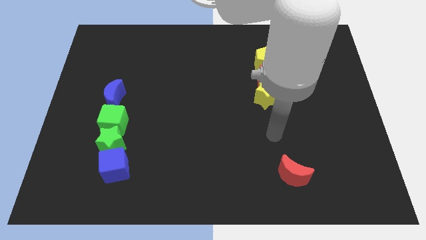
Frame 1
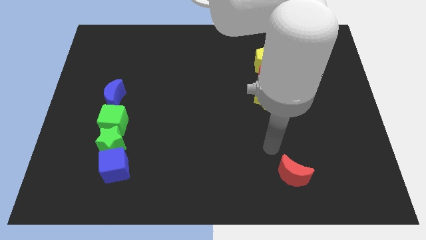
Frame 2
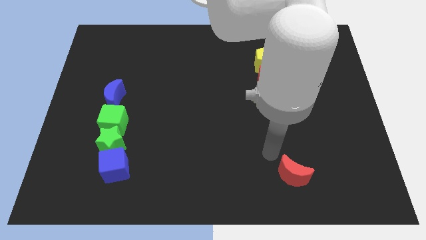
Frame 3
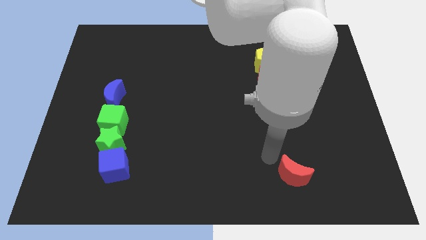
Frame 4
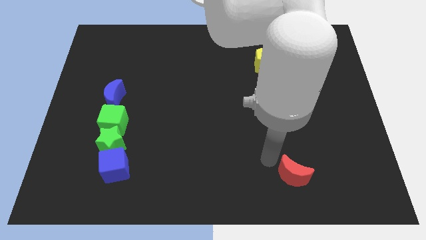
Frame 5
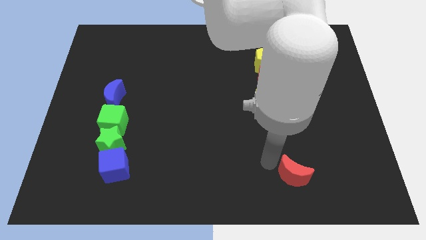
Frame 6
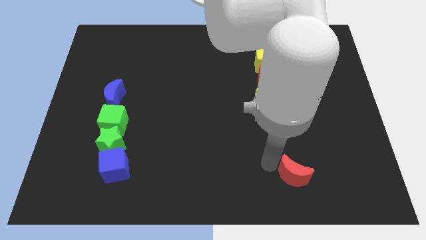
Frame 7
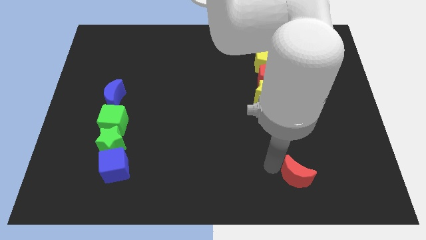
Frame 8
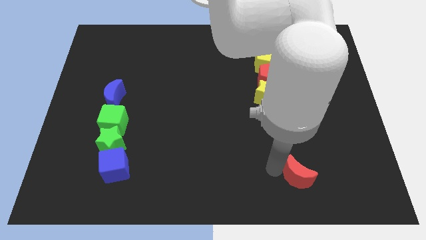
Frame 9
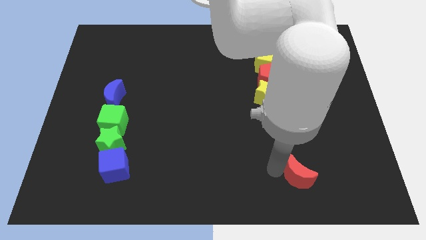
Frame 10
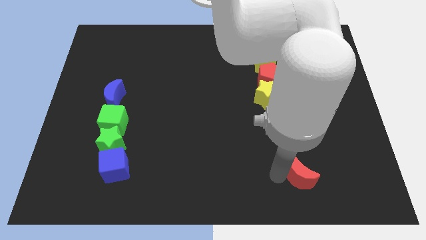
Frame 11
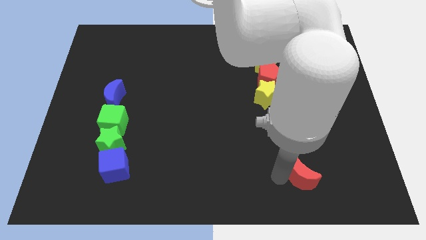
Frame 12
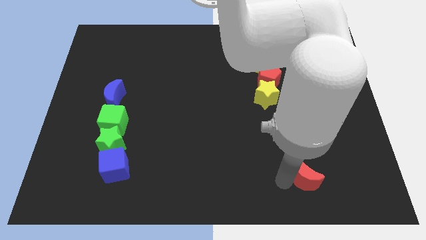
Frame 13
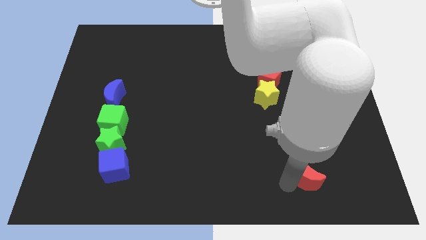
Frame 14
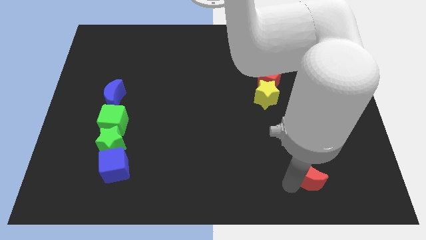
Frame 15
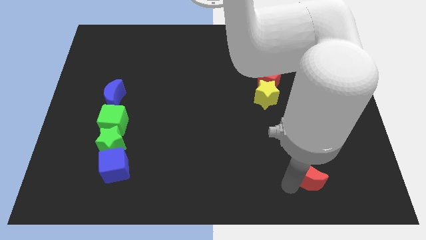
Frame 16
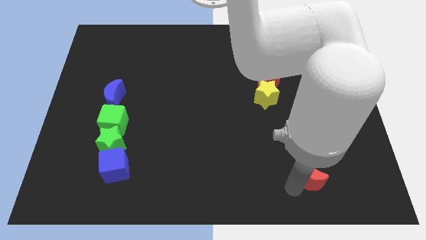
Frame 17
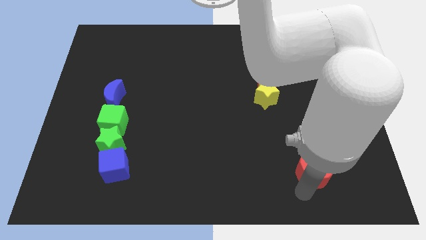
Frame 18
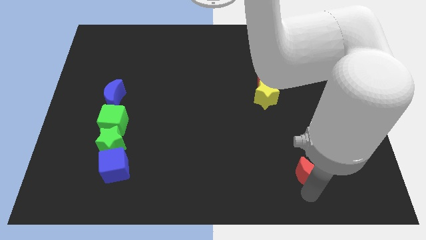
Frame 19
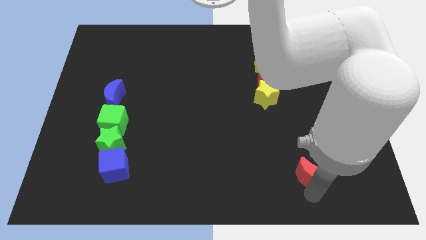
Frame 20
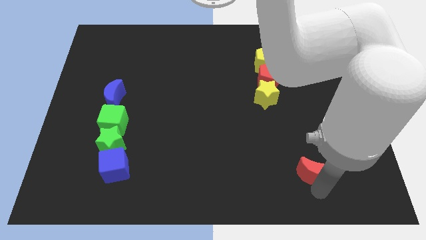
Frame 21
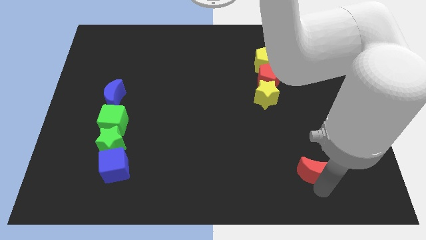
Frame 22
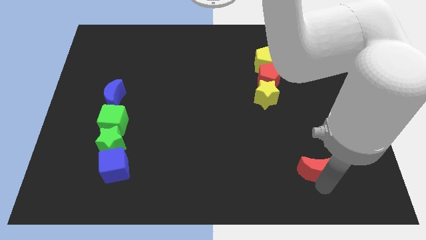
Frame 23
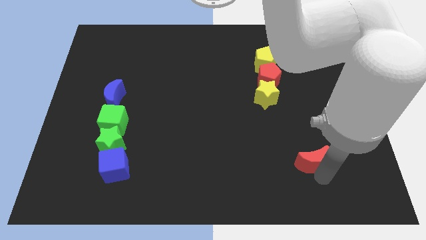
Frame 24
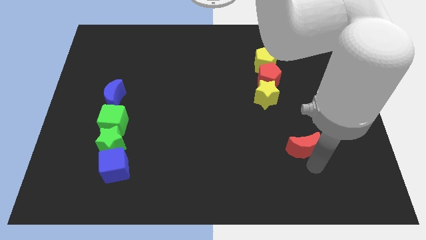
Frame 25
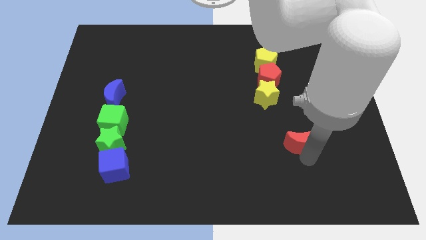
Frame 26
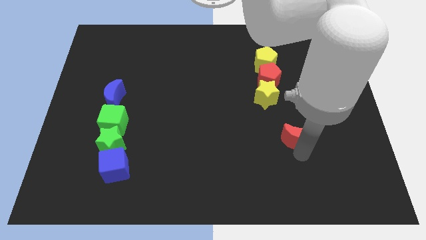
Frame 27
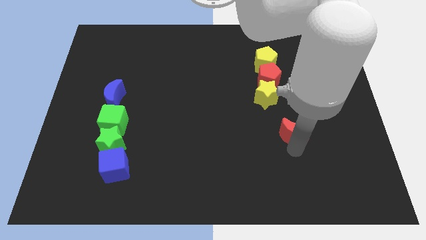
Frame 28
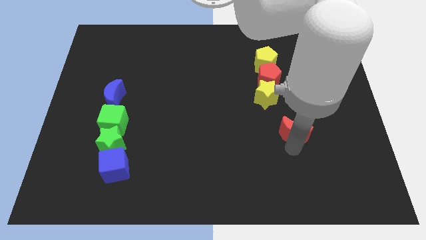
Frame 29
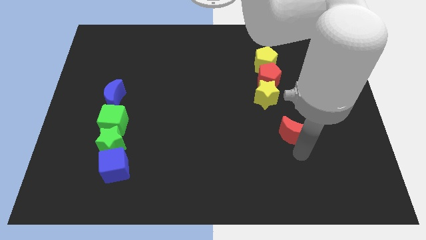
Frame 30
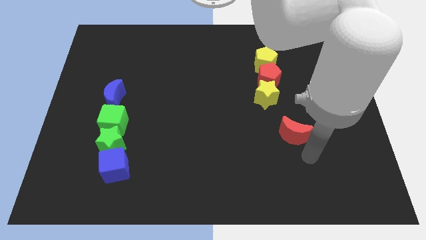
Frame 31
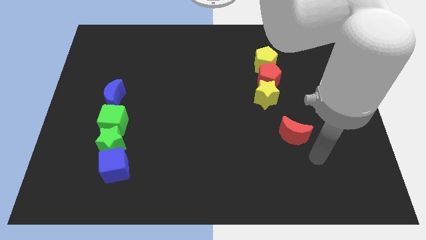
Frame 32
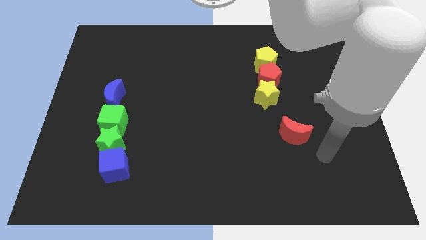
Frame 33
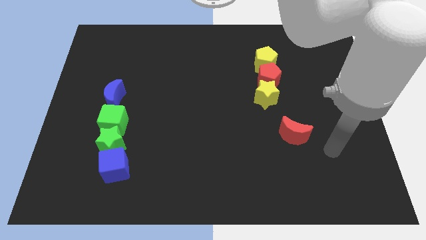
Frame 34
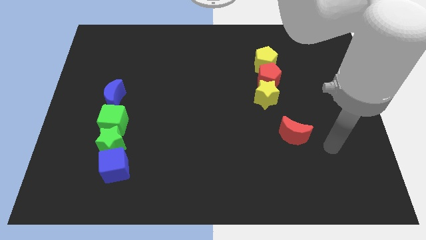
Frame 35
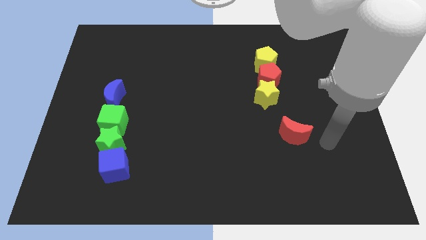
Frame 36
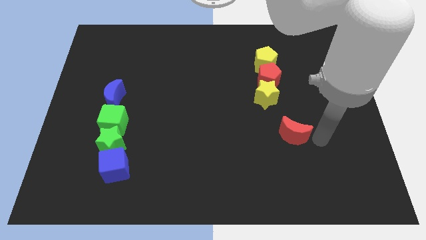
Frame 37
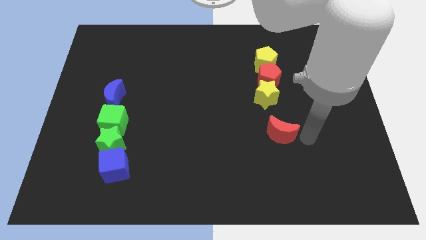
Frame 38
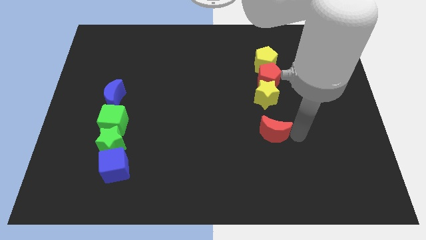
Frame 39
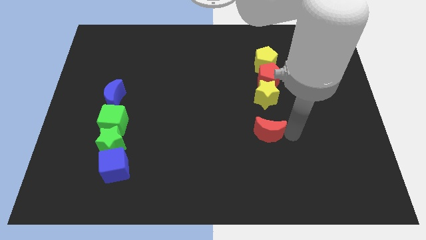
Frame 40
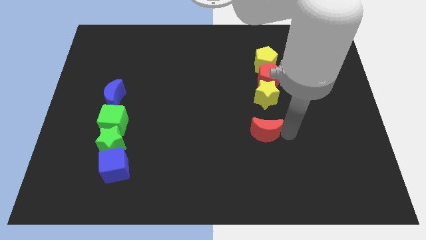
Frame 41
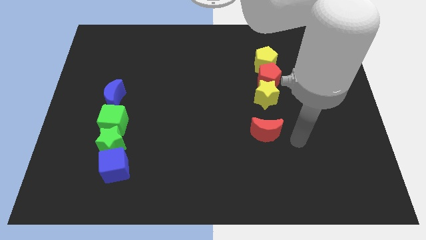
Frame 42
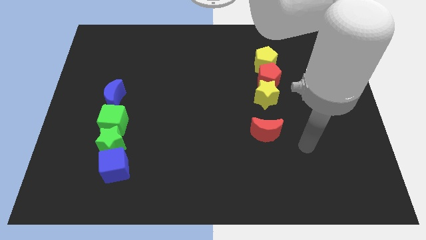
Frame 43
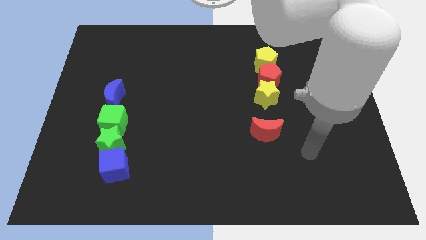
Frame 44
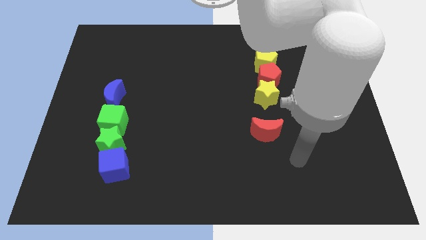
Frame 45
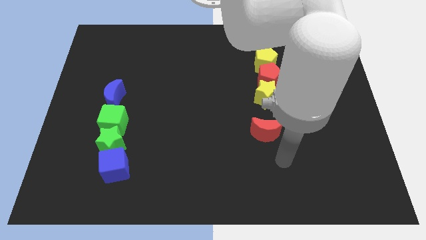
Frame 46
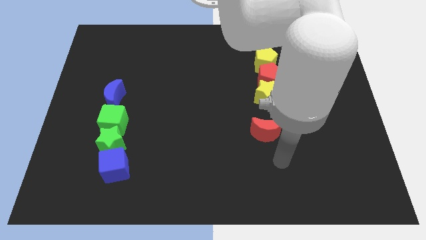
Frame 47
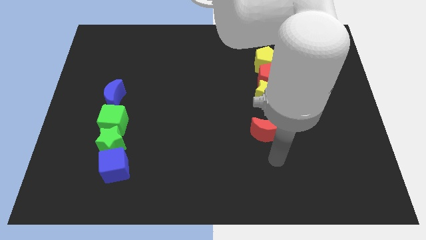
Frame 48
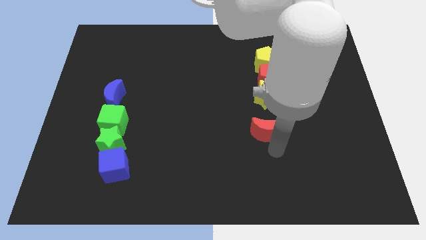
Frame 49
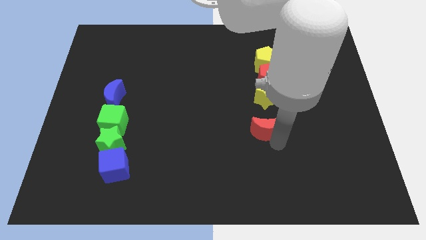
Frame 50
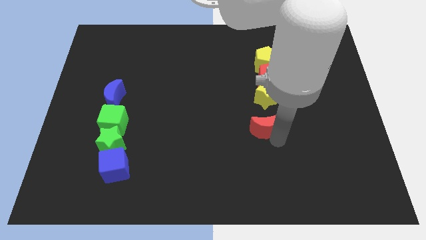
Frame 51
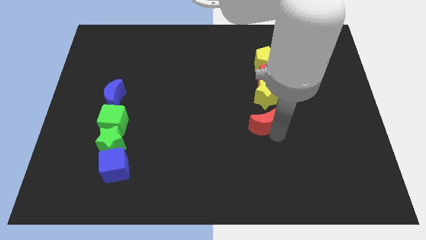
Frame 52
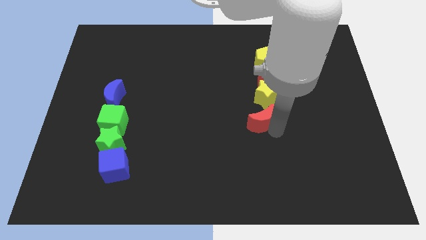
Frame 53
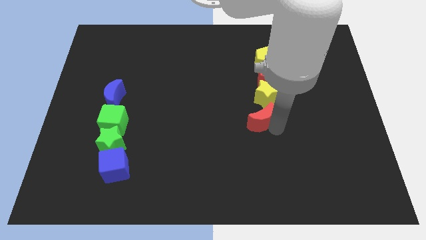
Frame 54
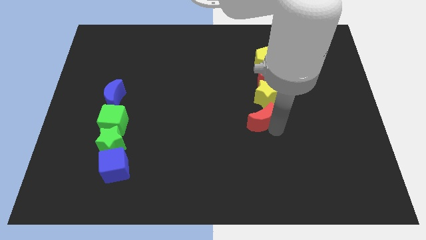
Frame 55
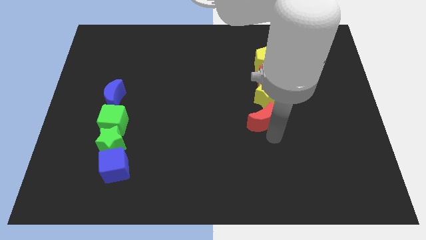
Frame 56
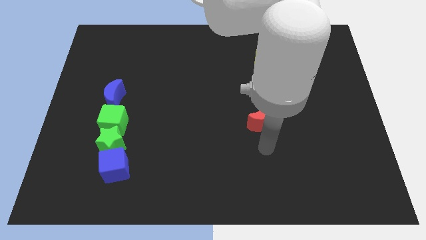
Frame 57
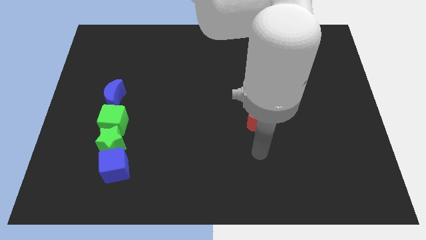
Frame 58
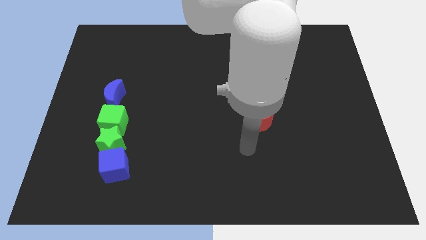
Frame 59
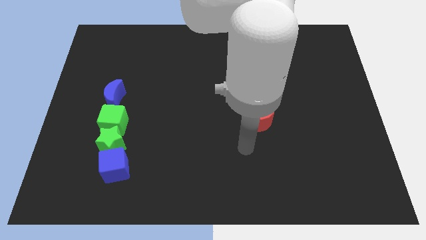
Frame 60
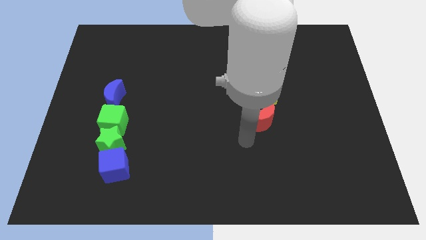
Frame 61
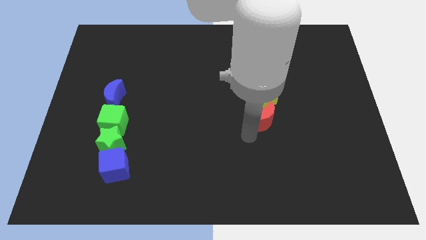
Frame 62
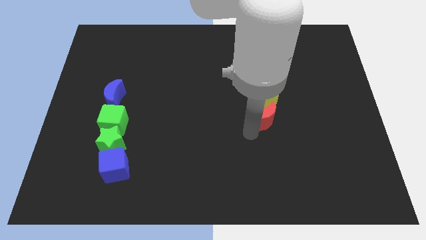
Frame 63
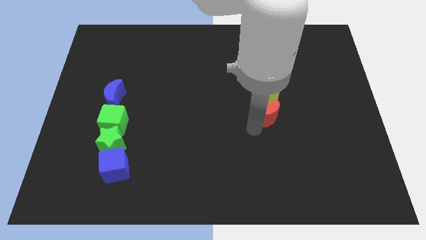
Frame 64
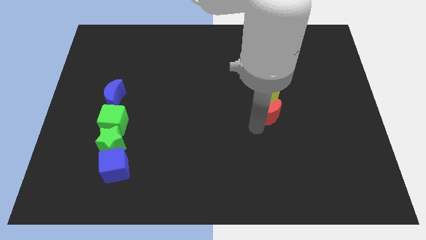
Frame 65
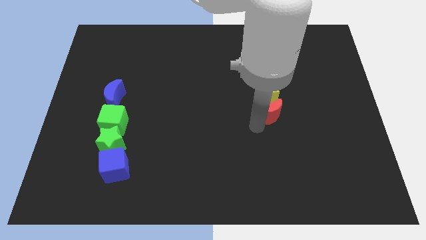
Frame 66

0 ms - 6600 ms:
place red crescent below the yellow star to form a vertical line with pentagons

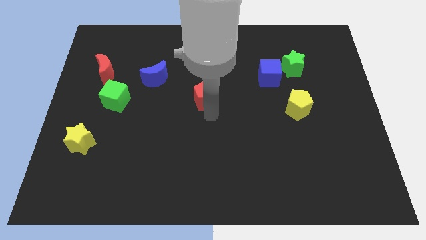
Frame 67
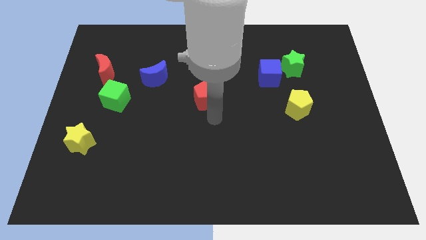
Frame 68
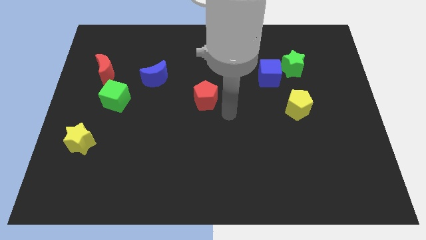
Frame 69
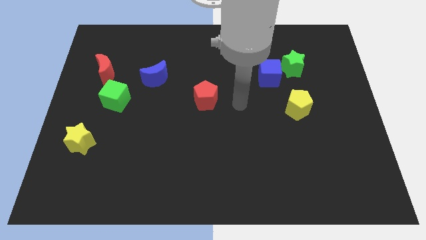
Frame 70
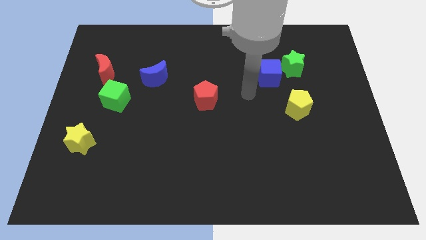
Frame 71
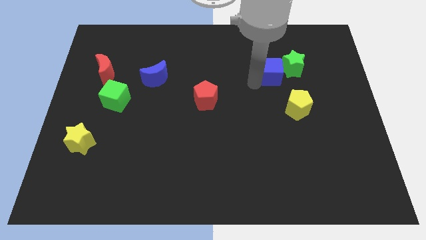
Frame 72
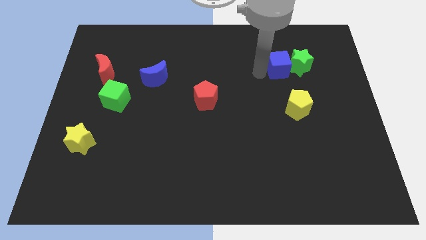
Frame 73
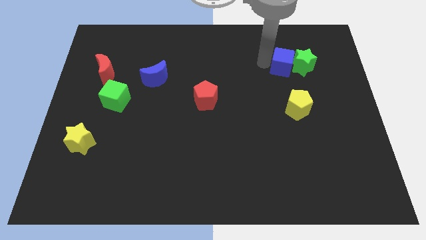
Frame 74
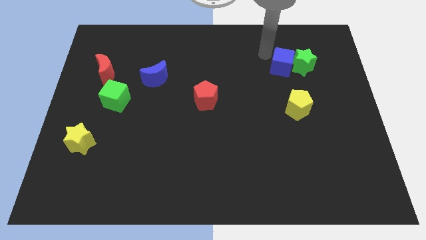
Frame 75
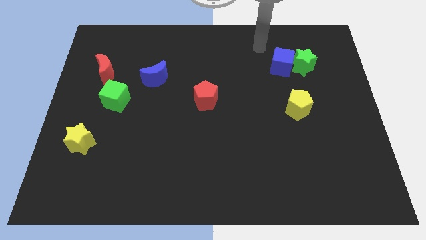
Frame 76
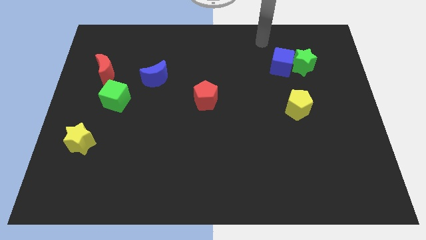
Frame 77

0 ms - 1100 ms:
push the blue cube into the green star

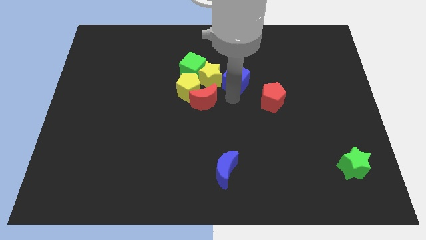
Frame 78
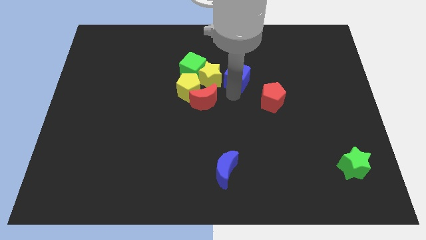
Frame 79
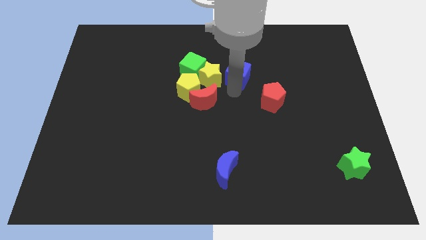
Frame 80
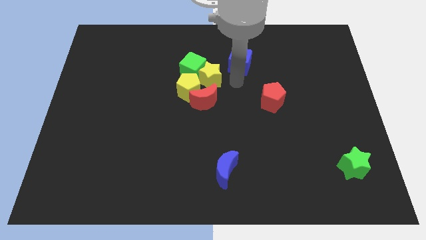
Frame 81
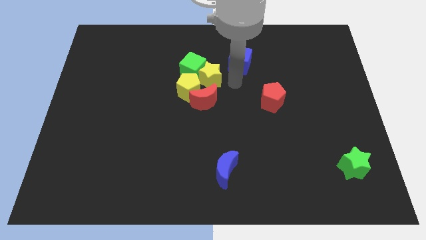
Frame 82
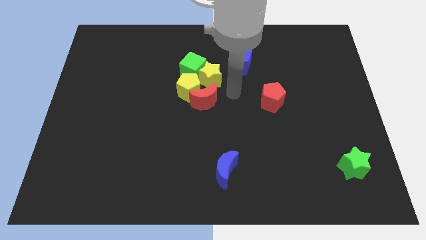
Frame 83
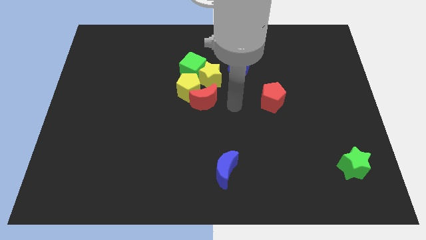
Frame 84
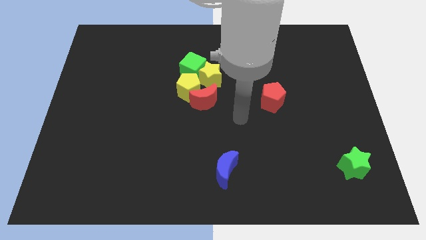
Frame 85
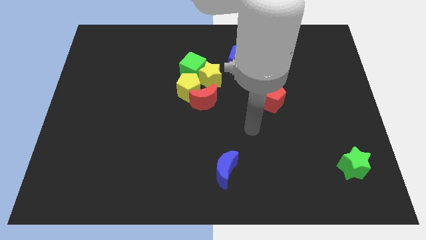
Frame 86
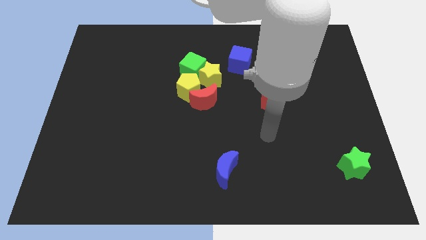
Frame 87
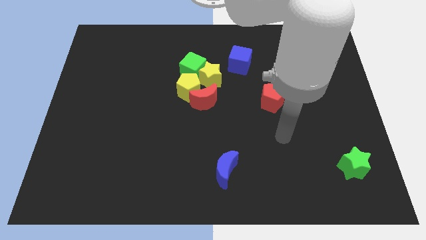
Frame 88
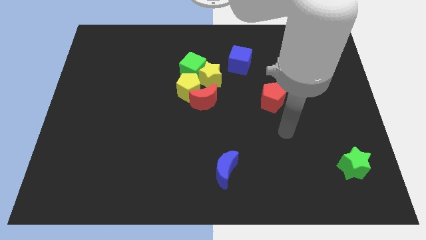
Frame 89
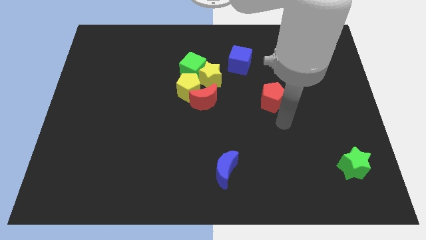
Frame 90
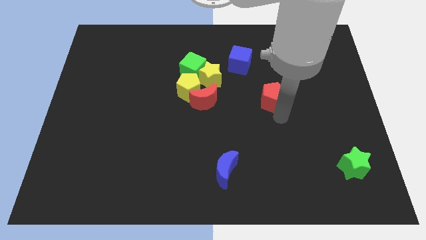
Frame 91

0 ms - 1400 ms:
move the blue cube diagonally top right to the yellow star
